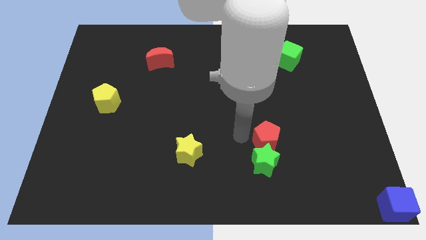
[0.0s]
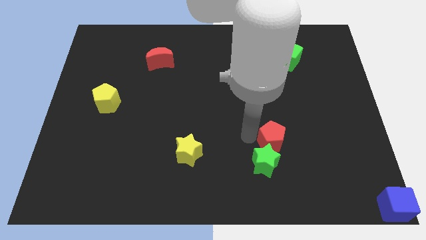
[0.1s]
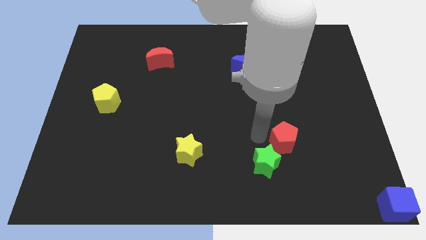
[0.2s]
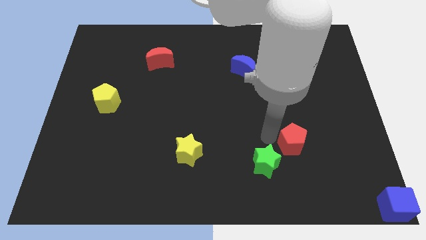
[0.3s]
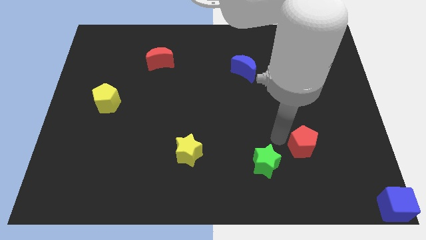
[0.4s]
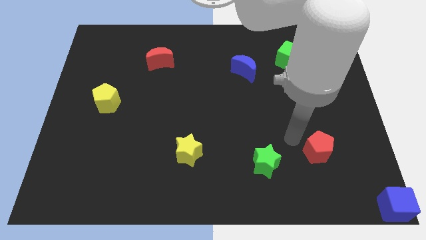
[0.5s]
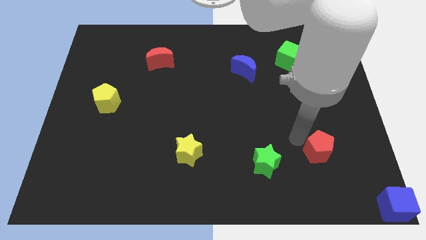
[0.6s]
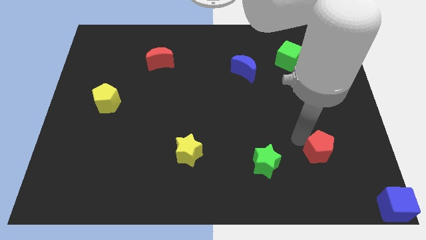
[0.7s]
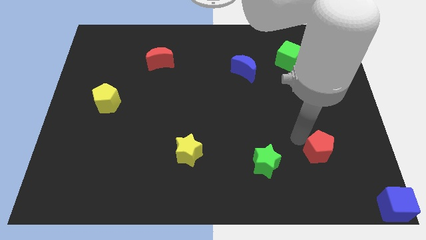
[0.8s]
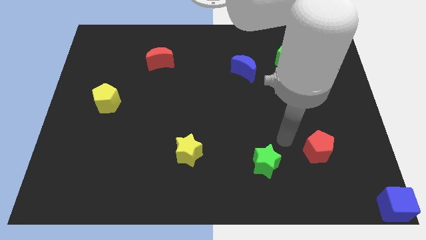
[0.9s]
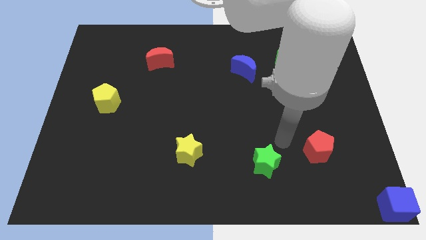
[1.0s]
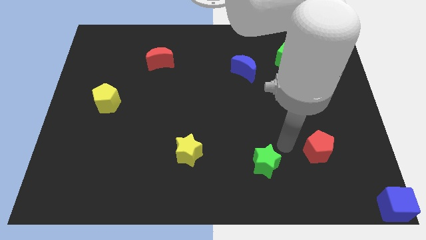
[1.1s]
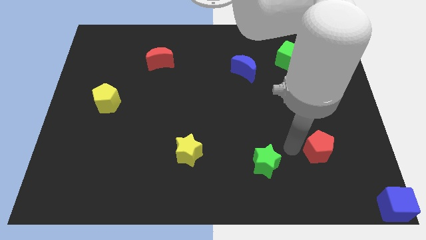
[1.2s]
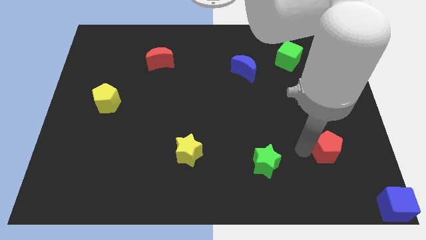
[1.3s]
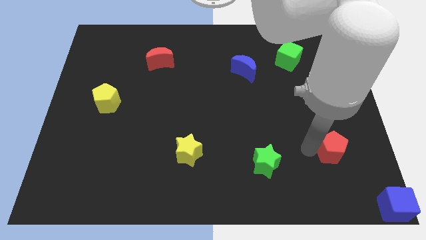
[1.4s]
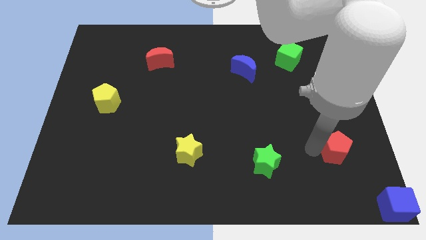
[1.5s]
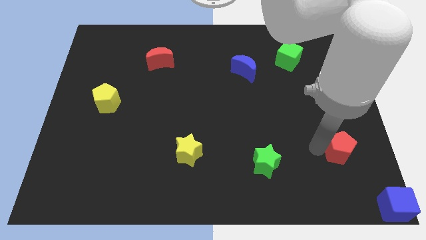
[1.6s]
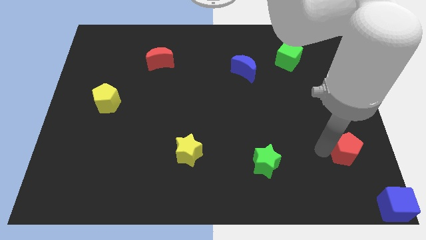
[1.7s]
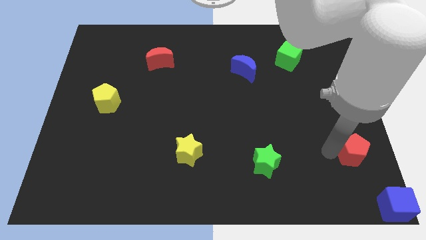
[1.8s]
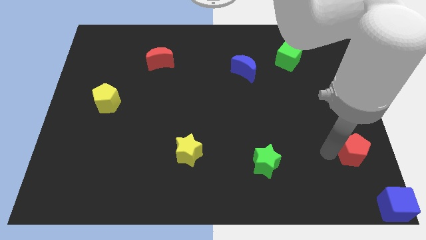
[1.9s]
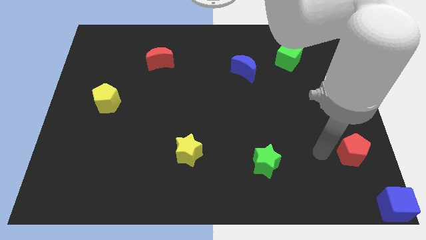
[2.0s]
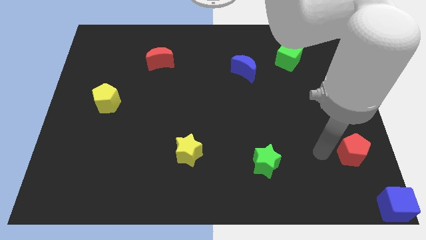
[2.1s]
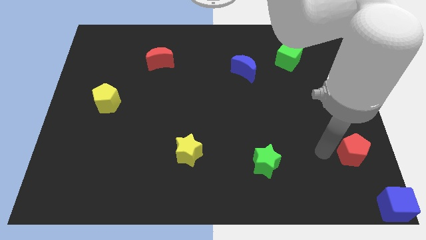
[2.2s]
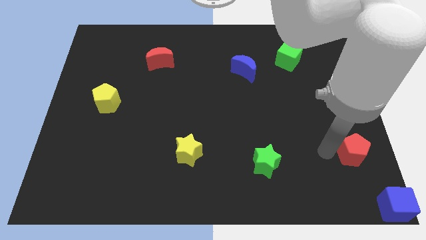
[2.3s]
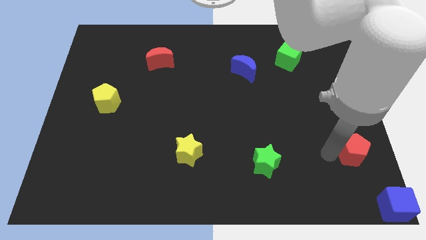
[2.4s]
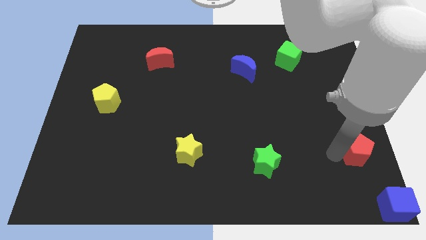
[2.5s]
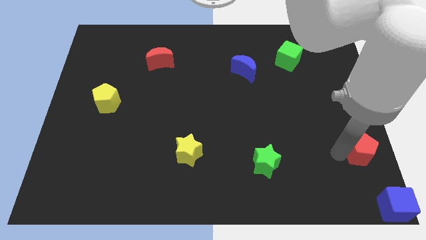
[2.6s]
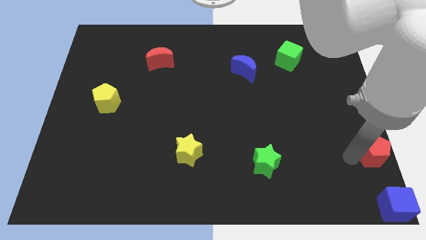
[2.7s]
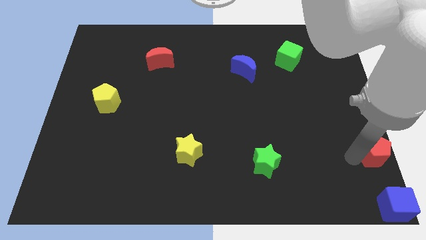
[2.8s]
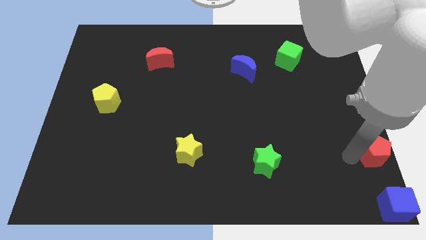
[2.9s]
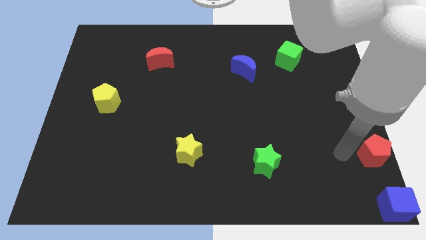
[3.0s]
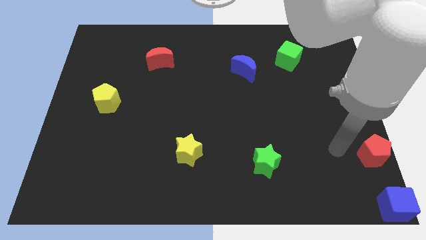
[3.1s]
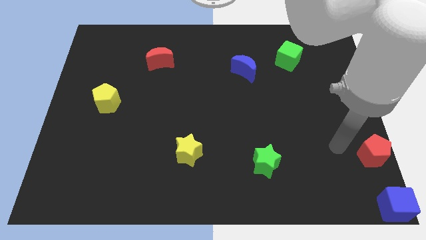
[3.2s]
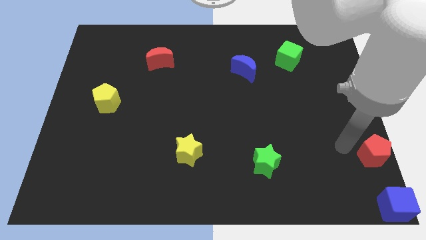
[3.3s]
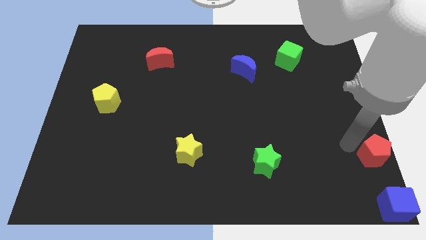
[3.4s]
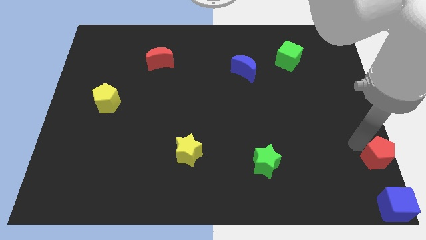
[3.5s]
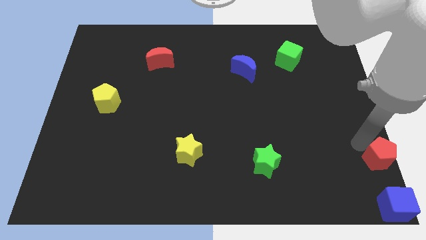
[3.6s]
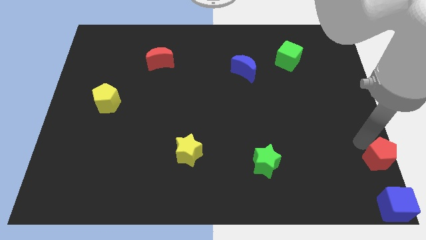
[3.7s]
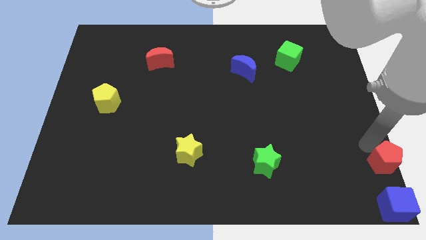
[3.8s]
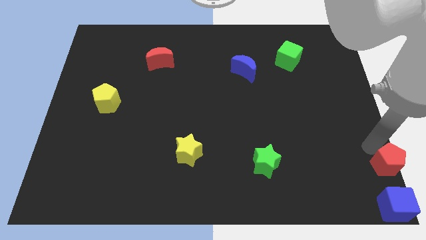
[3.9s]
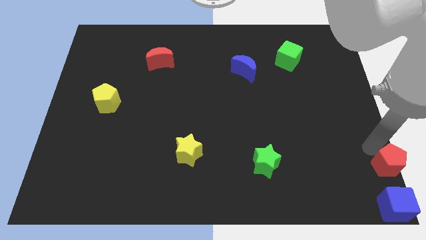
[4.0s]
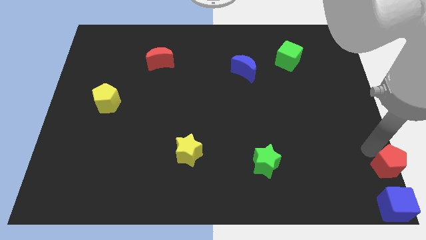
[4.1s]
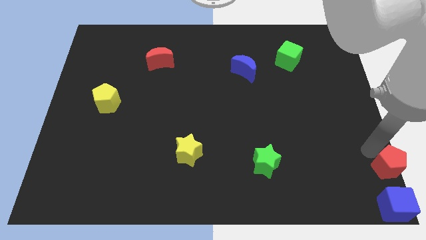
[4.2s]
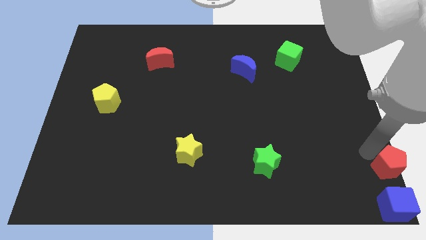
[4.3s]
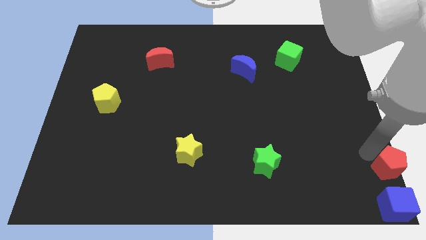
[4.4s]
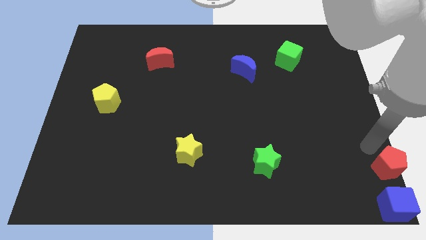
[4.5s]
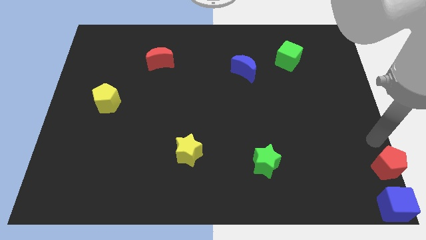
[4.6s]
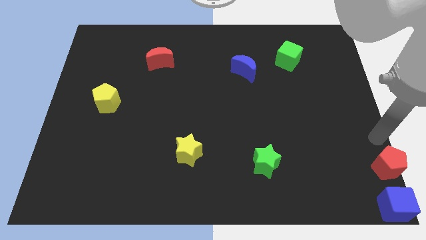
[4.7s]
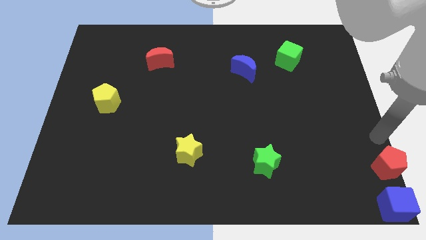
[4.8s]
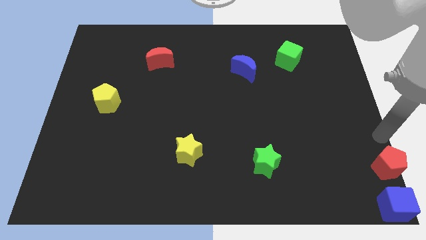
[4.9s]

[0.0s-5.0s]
push the red pentagon towards the bottom right corner of the board

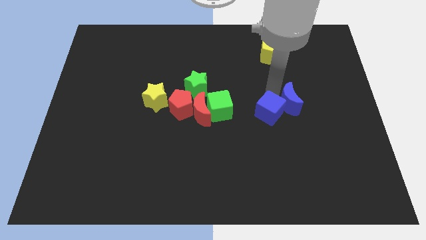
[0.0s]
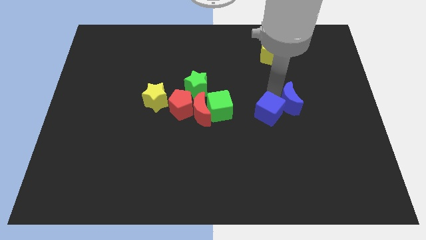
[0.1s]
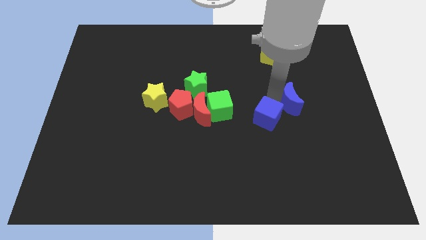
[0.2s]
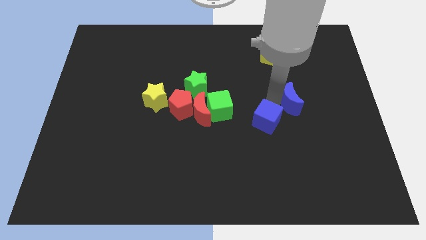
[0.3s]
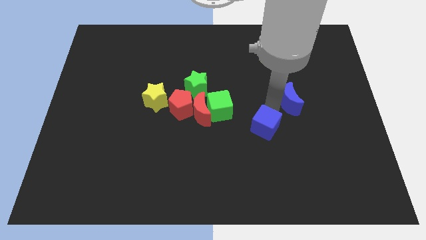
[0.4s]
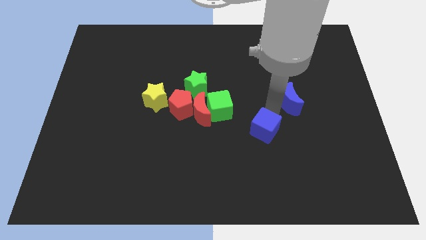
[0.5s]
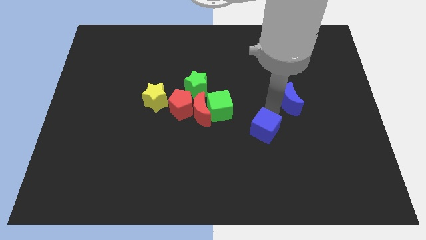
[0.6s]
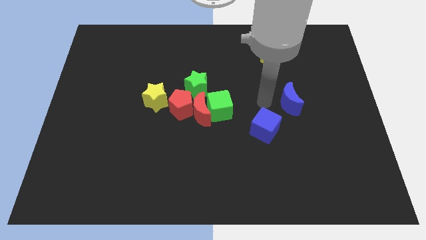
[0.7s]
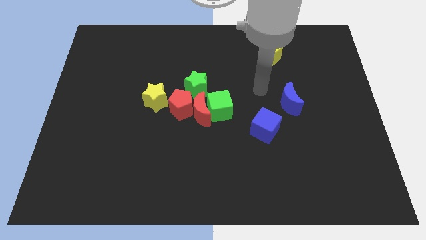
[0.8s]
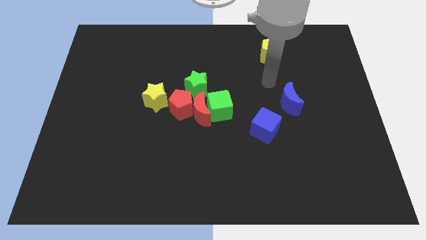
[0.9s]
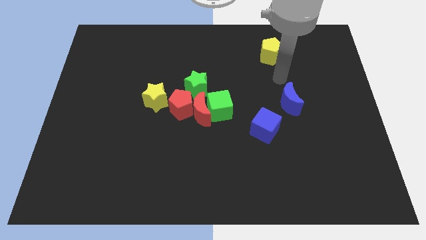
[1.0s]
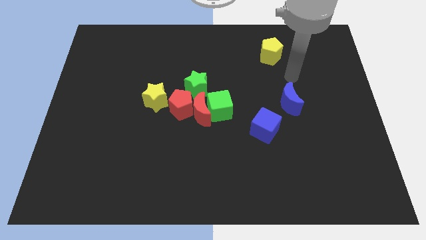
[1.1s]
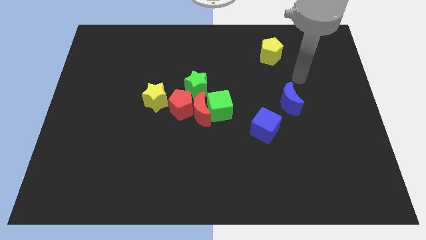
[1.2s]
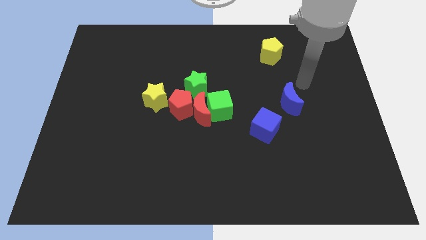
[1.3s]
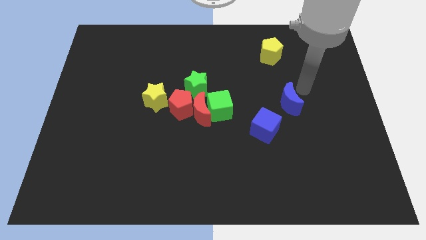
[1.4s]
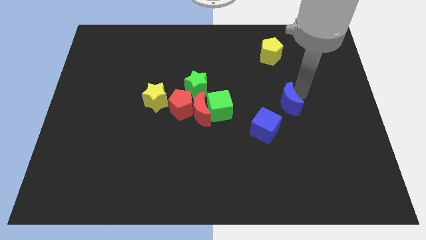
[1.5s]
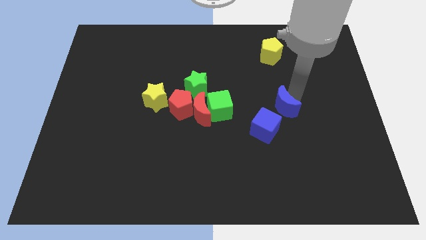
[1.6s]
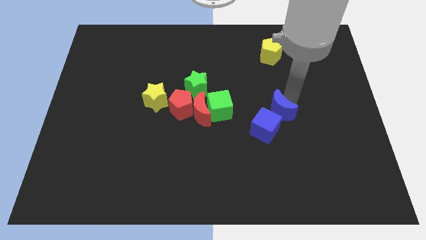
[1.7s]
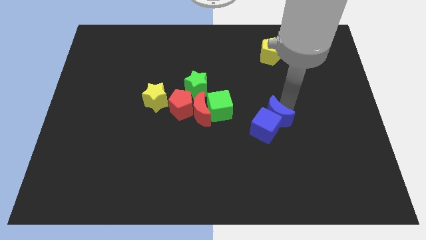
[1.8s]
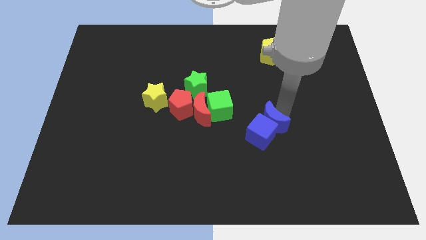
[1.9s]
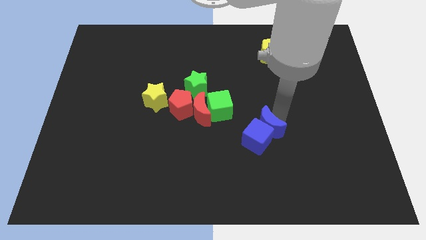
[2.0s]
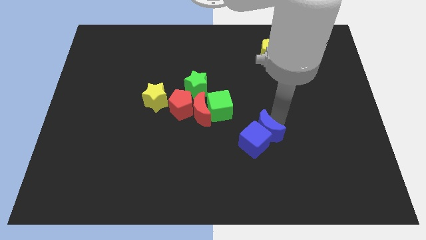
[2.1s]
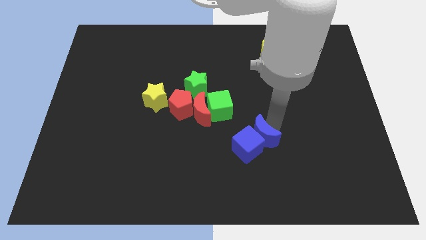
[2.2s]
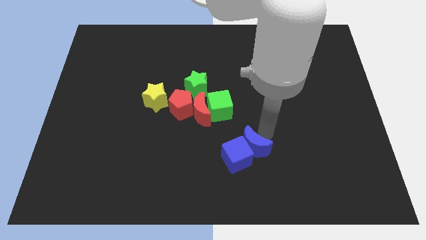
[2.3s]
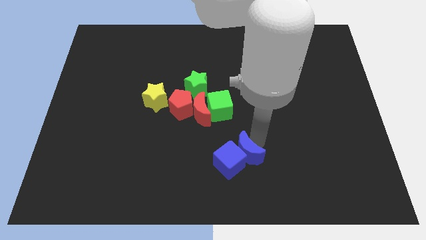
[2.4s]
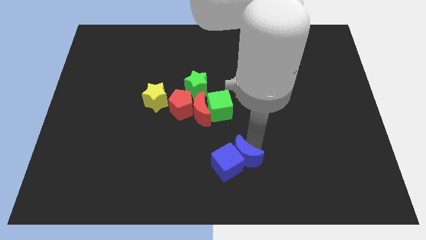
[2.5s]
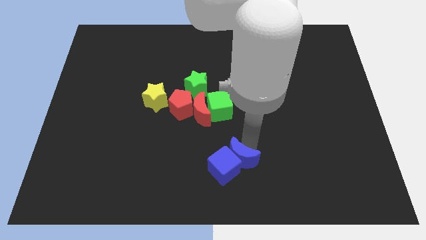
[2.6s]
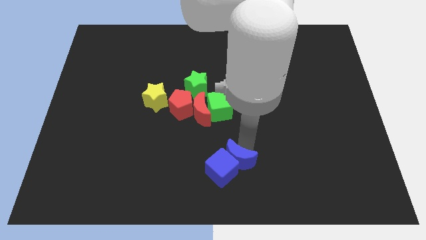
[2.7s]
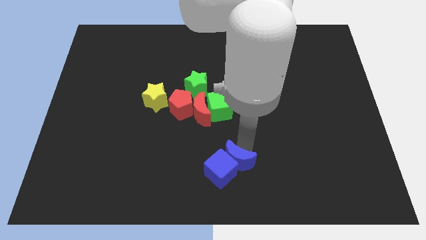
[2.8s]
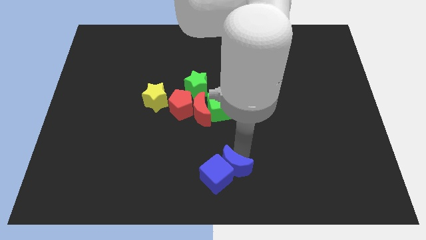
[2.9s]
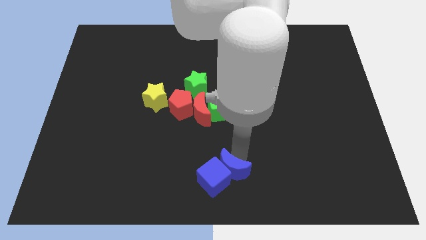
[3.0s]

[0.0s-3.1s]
push the blue blocks to the bottom of the green cube

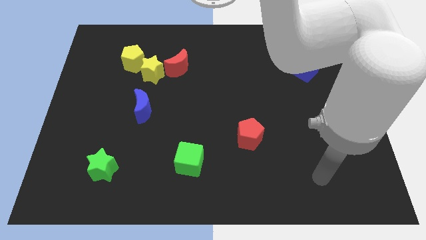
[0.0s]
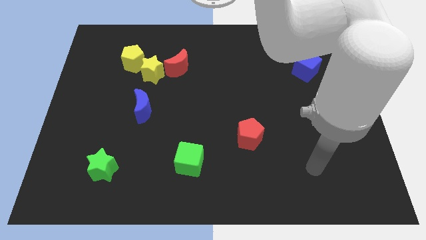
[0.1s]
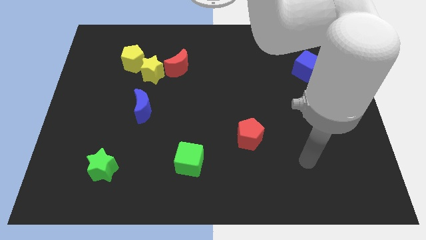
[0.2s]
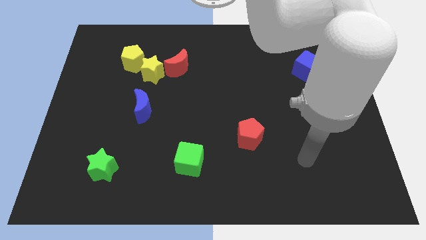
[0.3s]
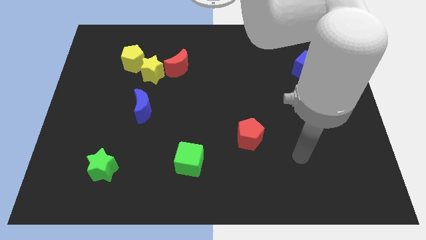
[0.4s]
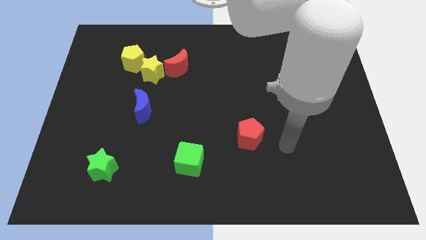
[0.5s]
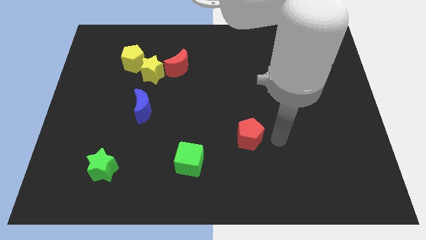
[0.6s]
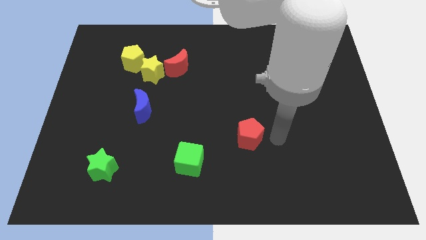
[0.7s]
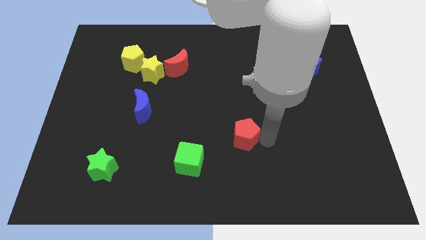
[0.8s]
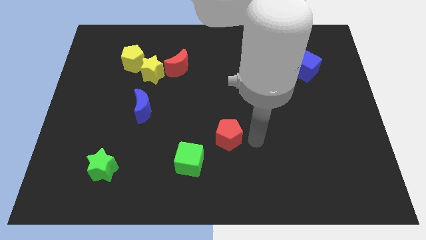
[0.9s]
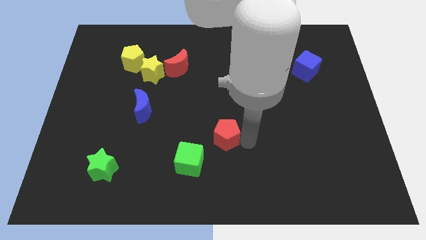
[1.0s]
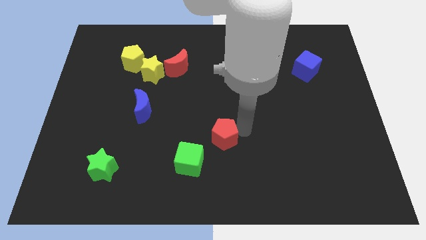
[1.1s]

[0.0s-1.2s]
move the red pentagon slightly to the left
